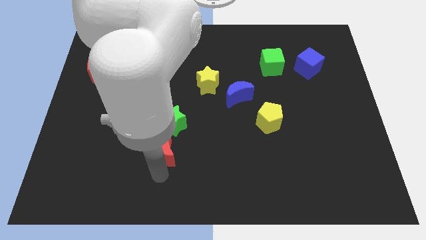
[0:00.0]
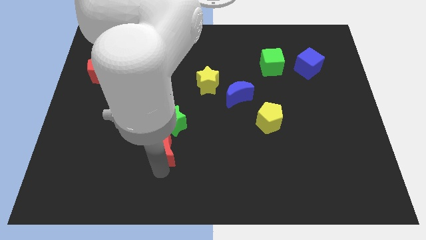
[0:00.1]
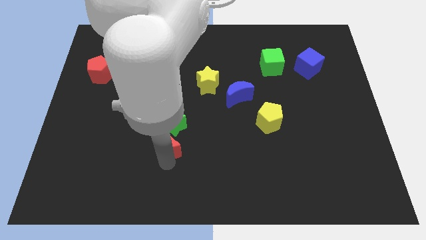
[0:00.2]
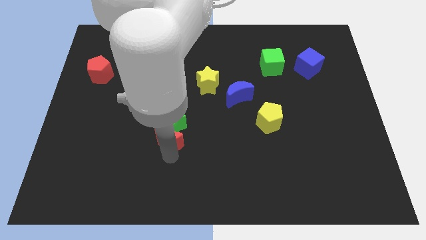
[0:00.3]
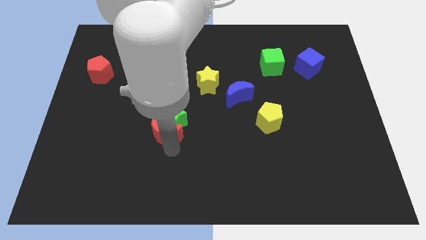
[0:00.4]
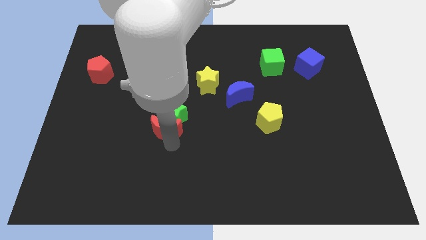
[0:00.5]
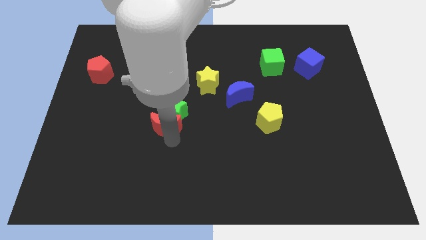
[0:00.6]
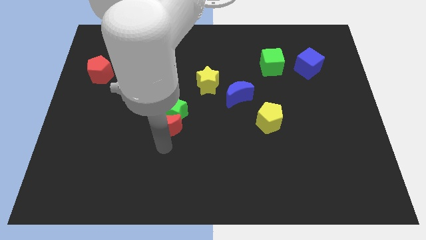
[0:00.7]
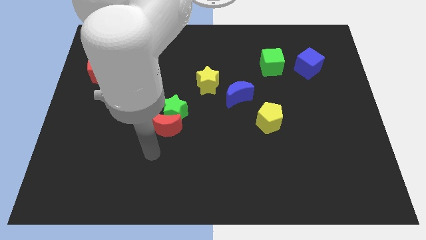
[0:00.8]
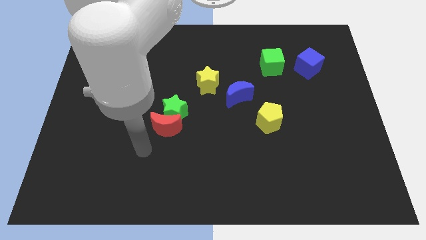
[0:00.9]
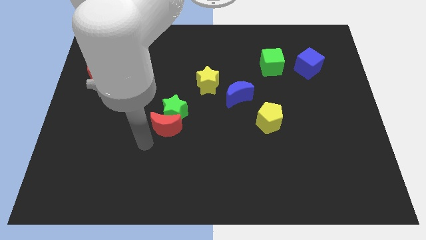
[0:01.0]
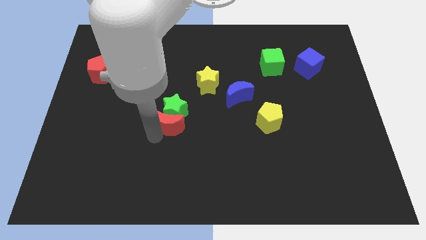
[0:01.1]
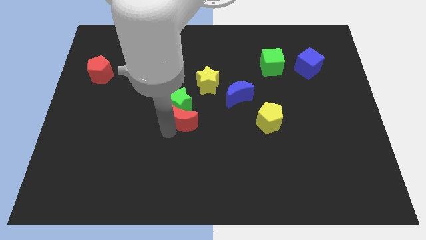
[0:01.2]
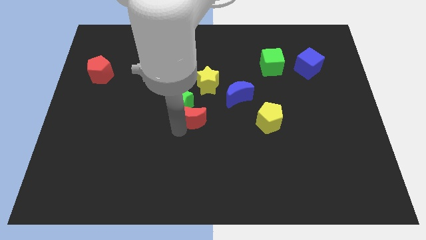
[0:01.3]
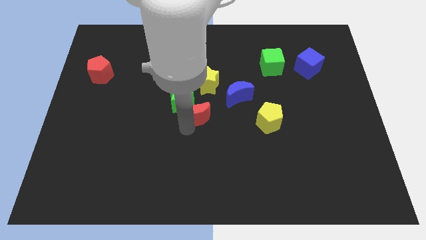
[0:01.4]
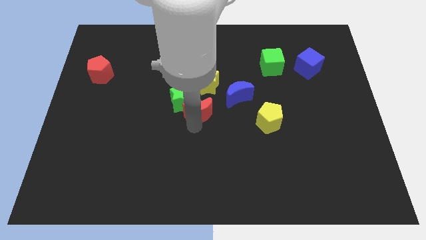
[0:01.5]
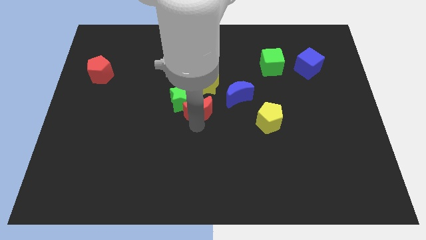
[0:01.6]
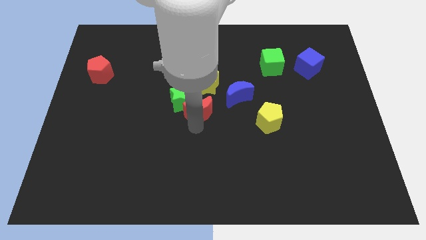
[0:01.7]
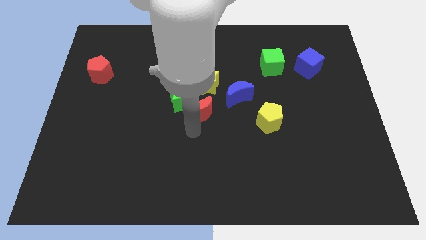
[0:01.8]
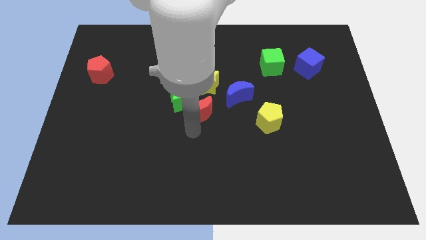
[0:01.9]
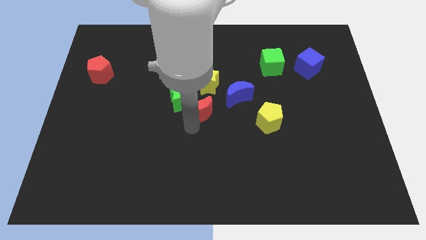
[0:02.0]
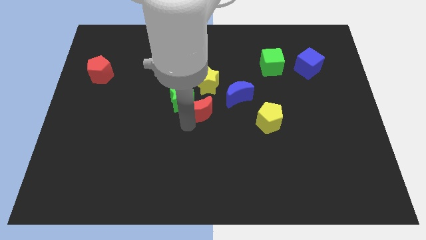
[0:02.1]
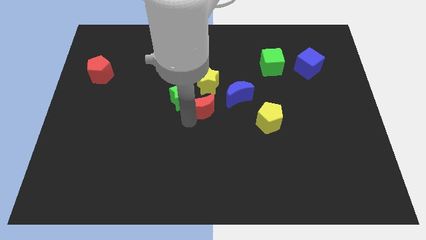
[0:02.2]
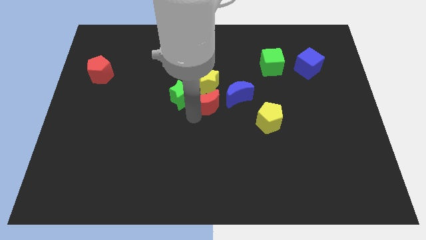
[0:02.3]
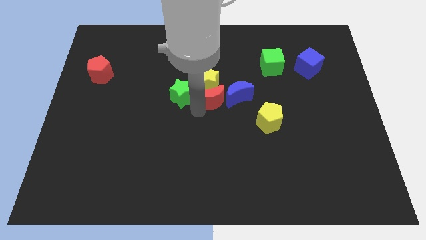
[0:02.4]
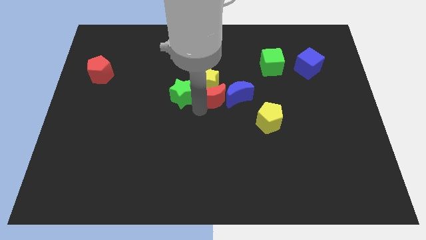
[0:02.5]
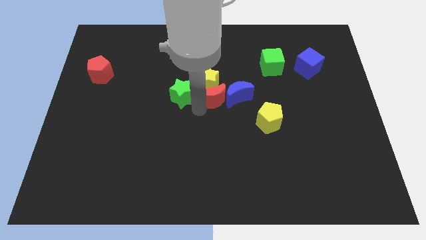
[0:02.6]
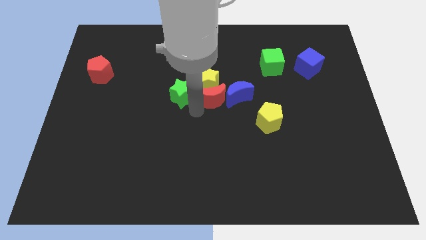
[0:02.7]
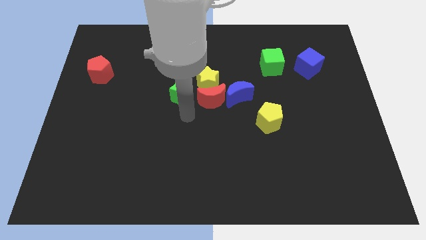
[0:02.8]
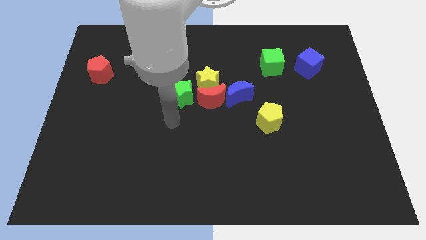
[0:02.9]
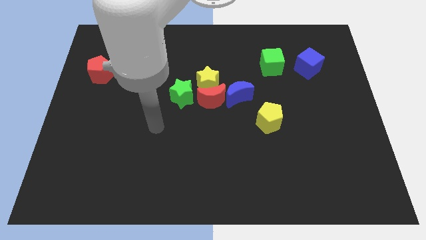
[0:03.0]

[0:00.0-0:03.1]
move red moon below yellow star

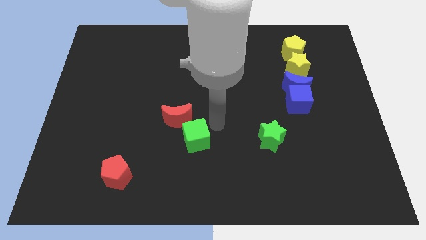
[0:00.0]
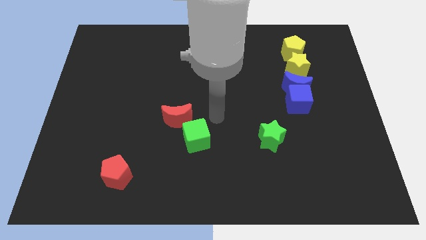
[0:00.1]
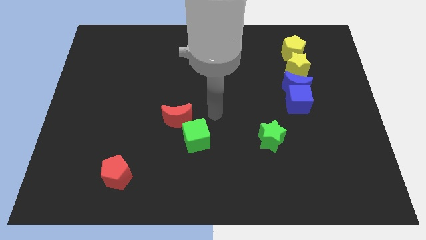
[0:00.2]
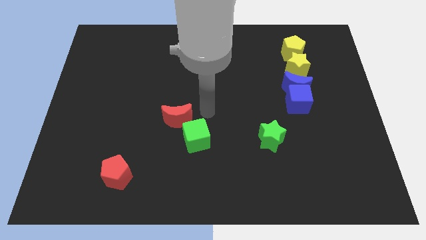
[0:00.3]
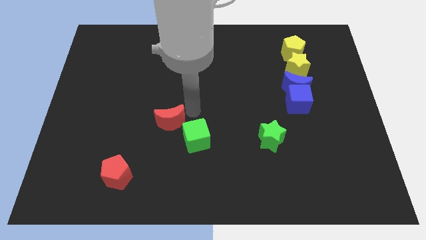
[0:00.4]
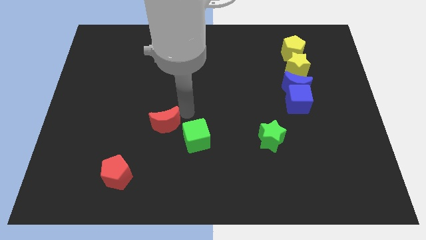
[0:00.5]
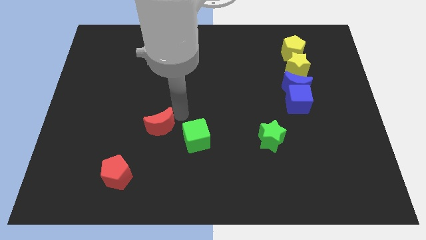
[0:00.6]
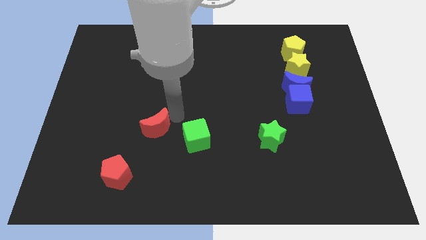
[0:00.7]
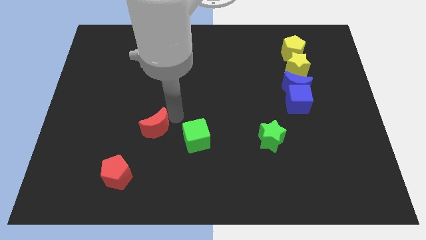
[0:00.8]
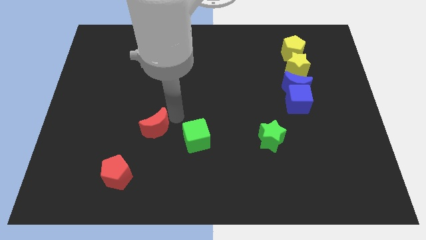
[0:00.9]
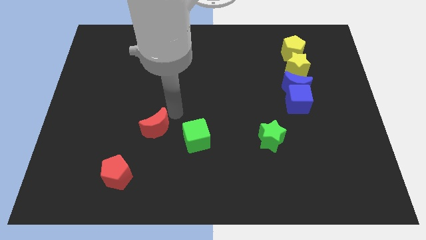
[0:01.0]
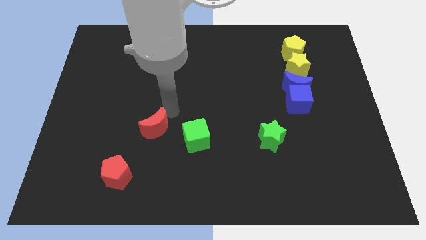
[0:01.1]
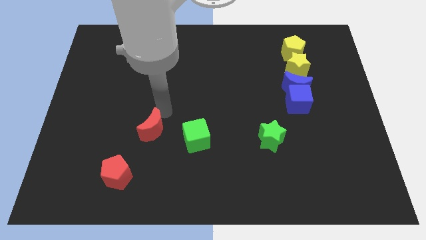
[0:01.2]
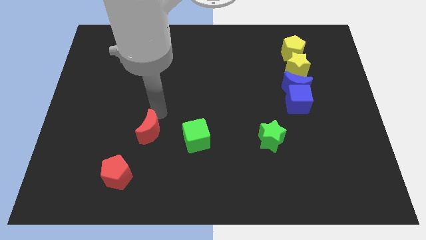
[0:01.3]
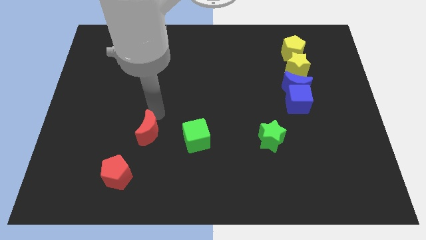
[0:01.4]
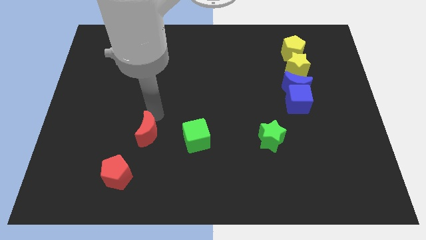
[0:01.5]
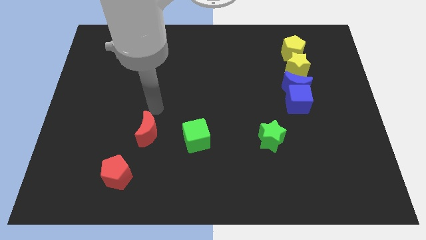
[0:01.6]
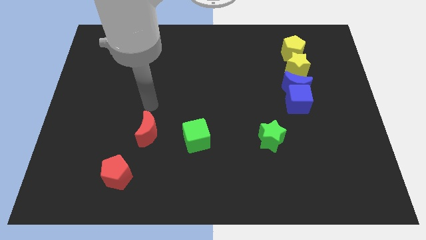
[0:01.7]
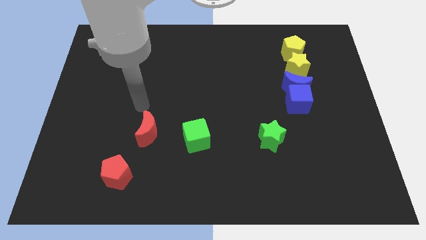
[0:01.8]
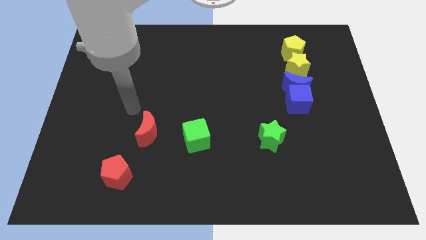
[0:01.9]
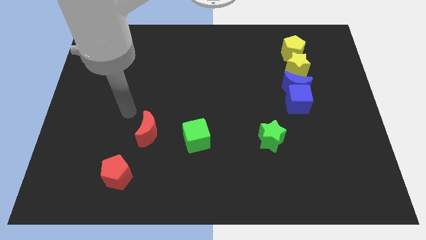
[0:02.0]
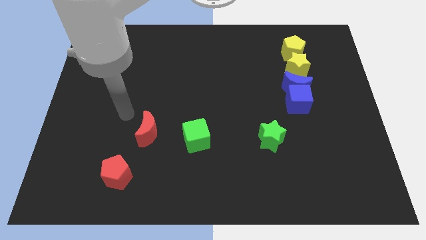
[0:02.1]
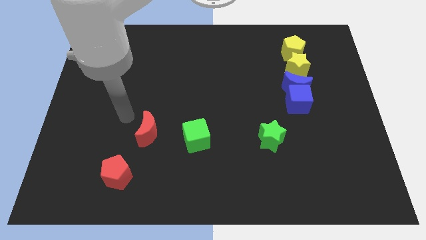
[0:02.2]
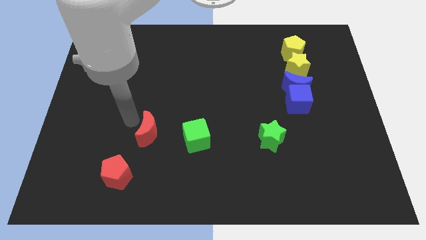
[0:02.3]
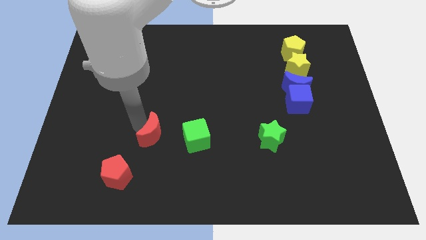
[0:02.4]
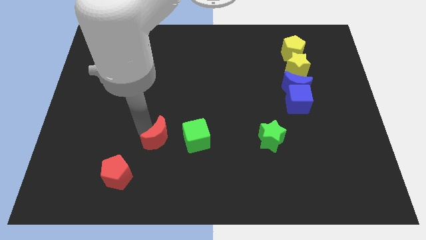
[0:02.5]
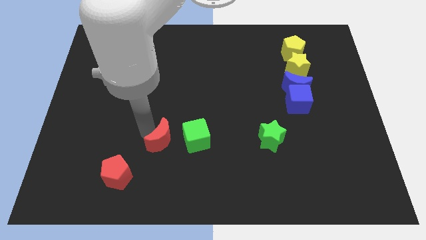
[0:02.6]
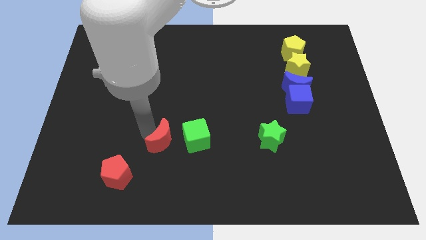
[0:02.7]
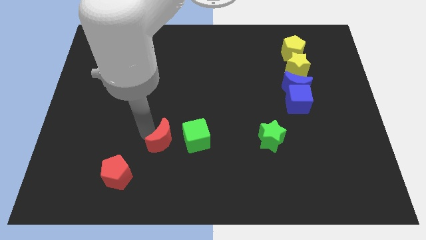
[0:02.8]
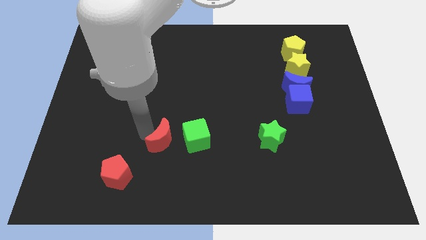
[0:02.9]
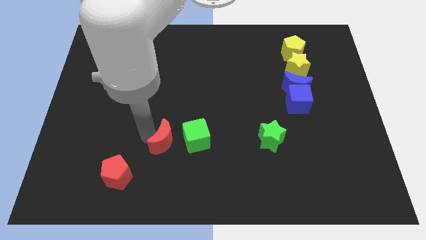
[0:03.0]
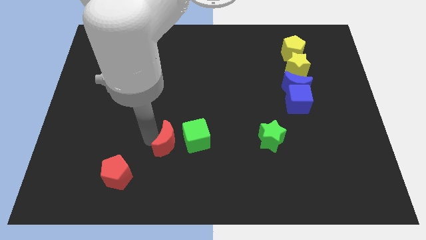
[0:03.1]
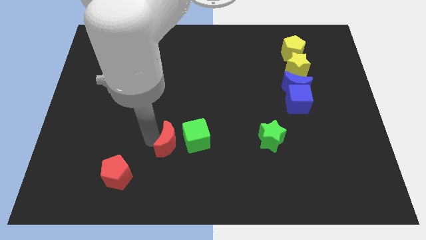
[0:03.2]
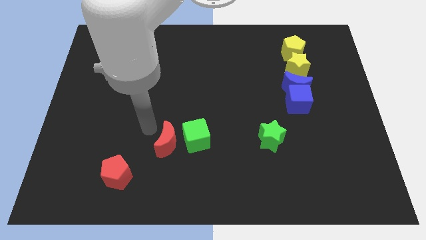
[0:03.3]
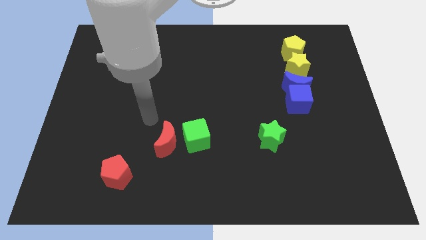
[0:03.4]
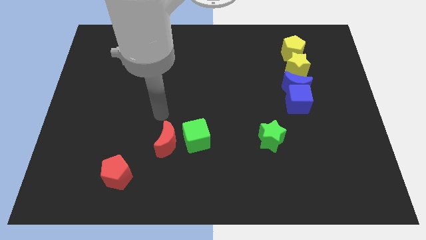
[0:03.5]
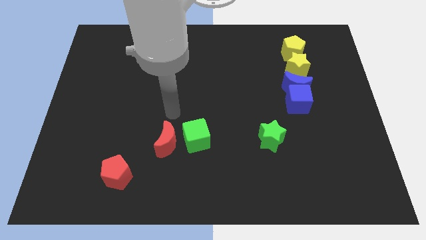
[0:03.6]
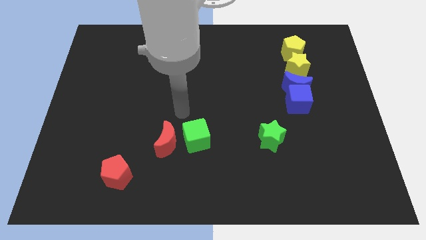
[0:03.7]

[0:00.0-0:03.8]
move the red moon vertically parallel to the green cube

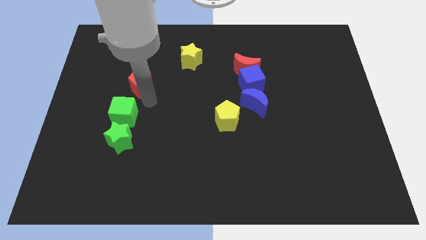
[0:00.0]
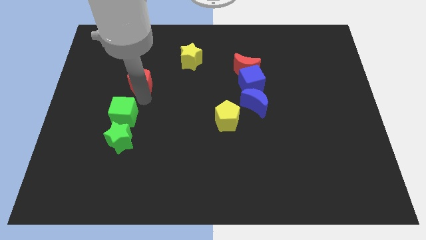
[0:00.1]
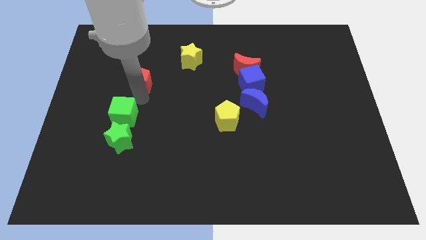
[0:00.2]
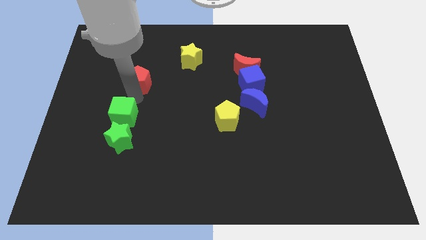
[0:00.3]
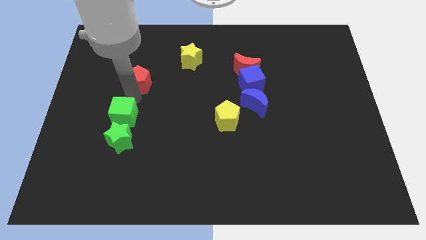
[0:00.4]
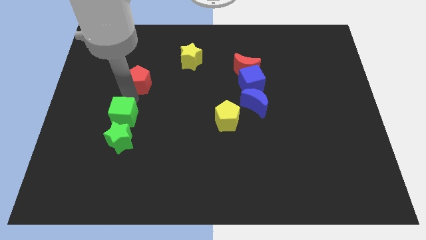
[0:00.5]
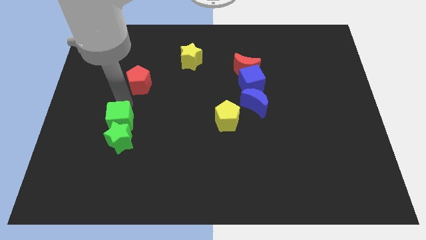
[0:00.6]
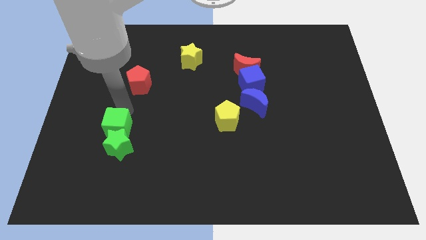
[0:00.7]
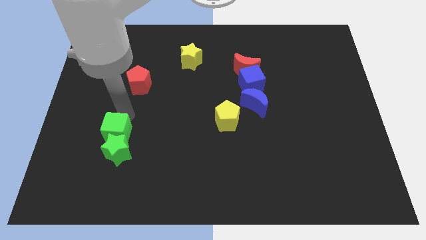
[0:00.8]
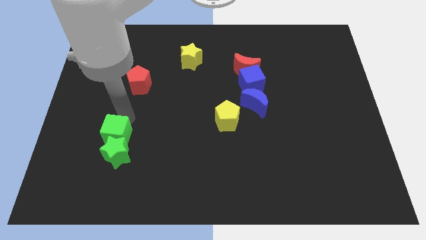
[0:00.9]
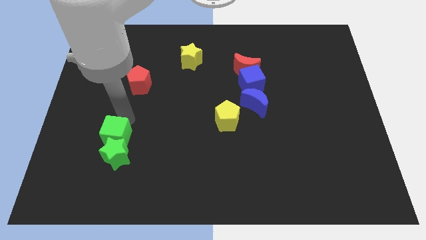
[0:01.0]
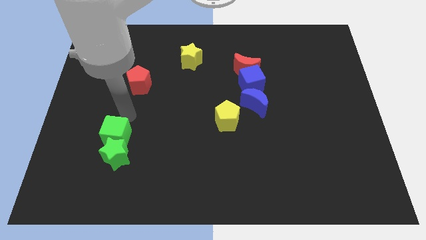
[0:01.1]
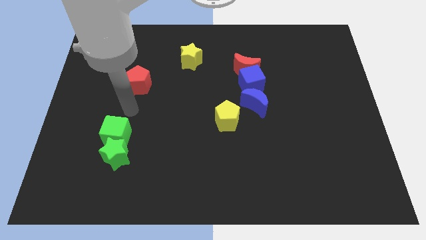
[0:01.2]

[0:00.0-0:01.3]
slide the green cube into the top side of the green star

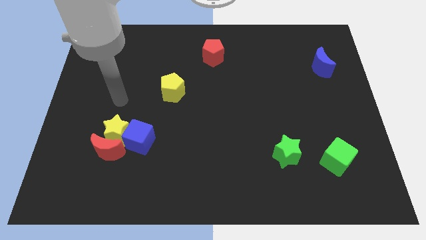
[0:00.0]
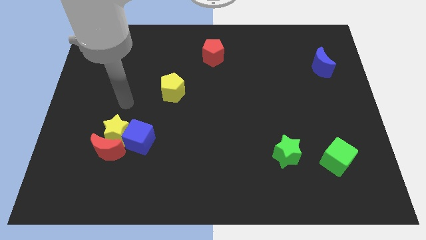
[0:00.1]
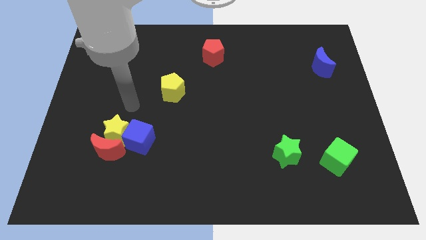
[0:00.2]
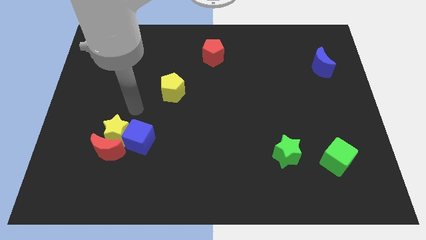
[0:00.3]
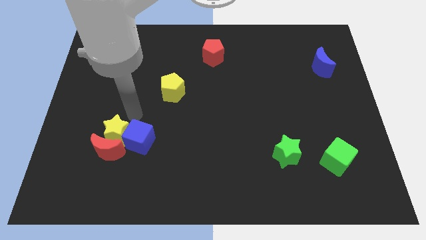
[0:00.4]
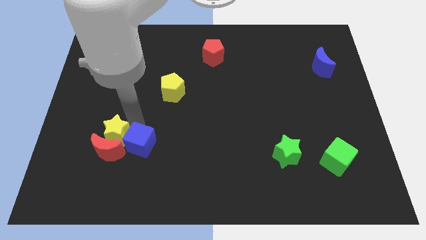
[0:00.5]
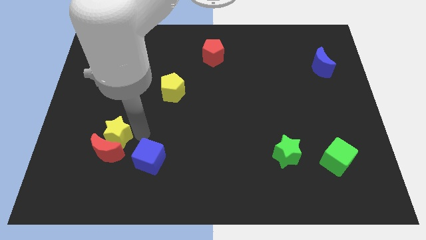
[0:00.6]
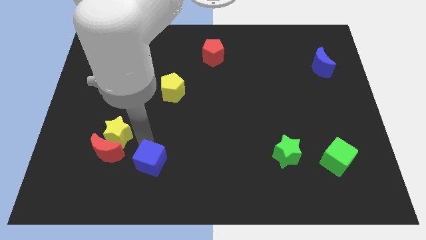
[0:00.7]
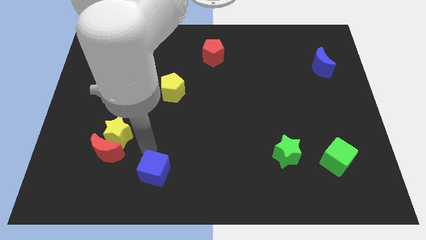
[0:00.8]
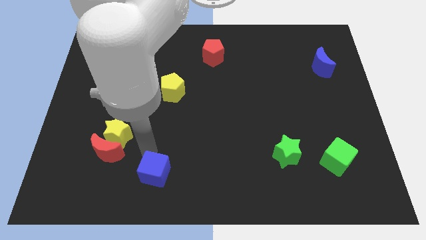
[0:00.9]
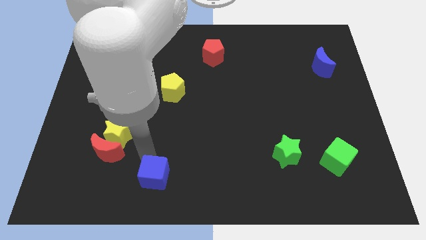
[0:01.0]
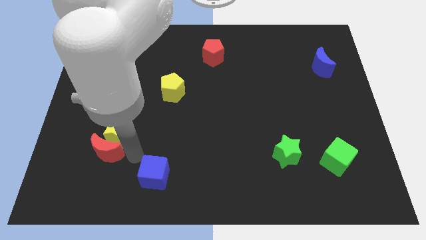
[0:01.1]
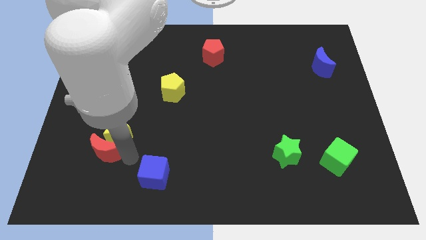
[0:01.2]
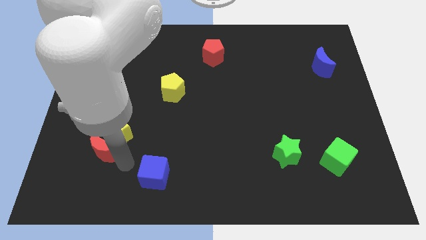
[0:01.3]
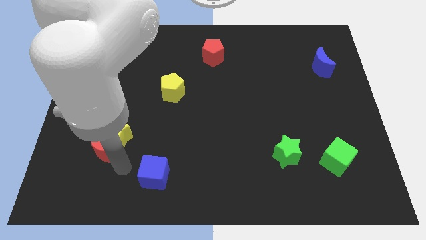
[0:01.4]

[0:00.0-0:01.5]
move the blue cube slightly to the bottom
